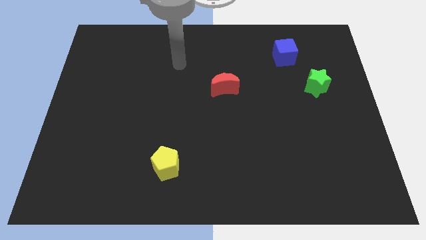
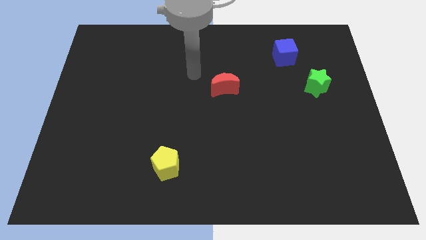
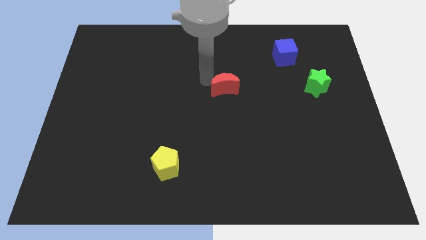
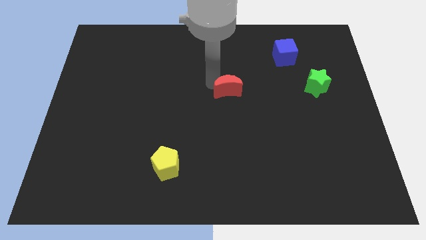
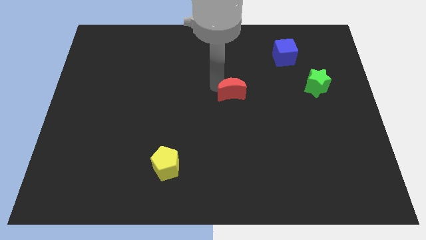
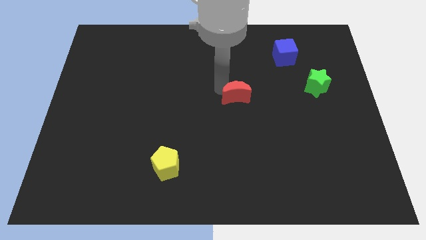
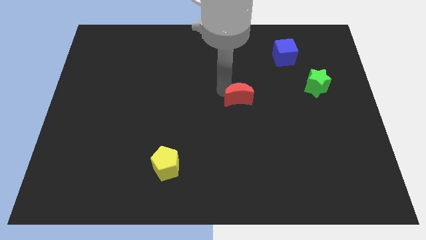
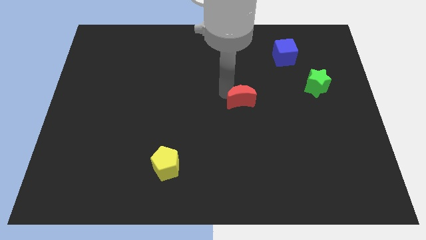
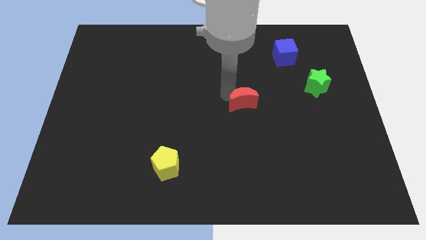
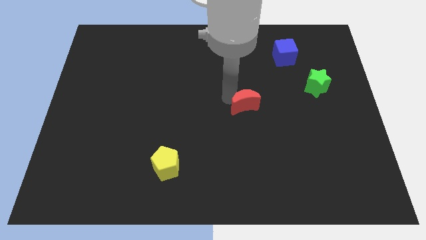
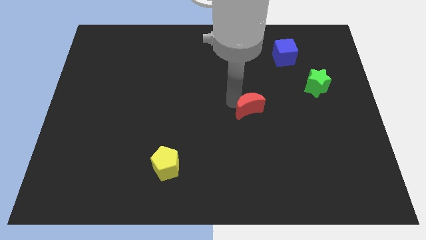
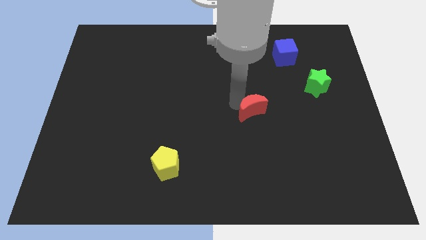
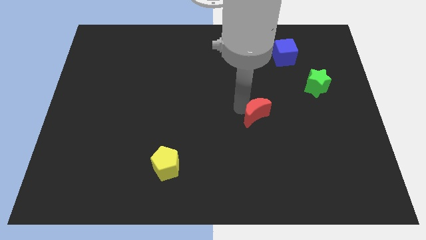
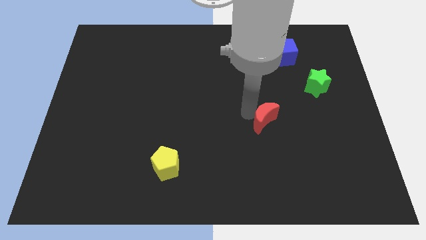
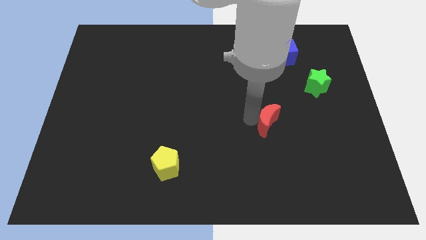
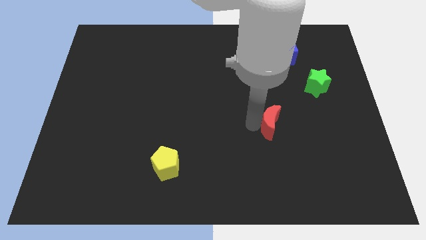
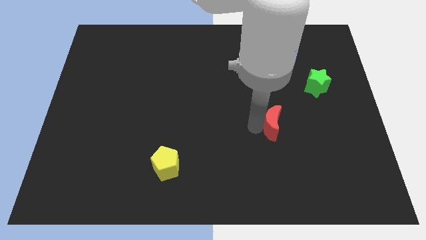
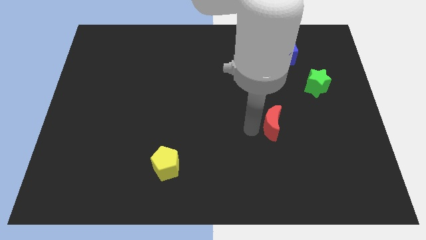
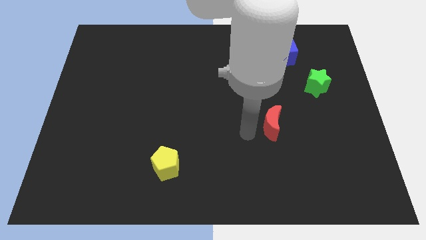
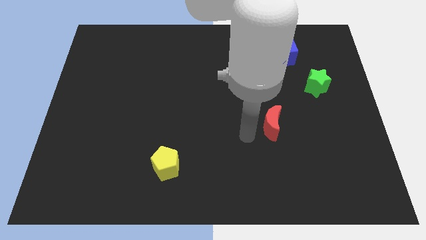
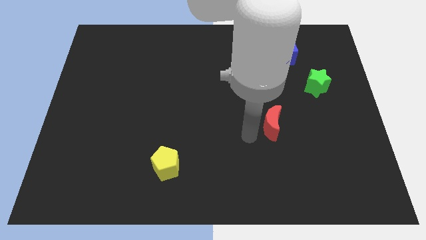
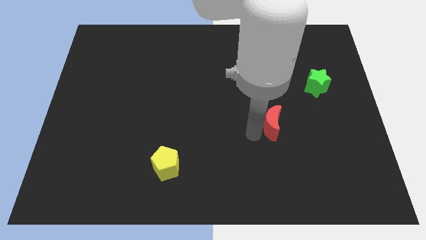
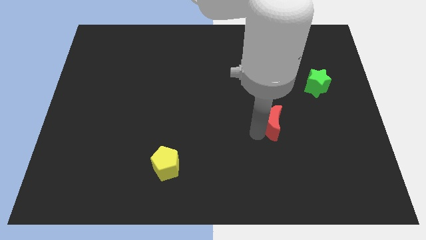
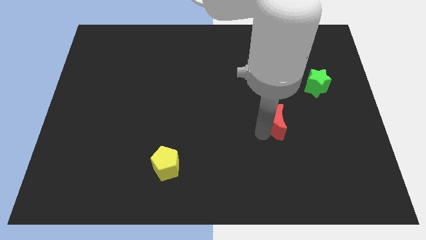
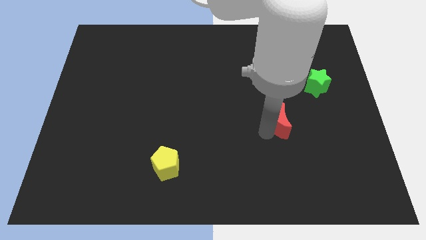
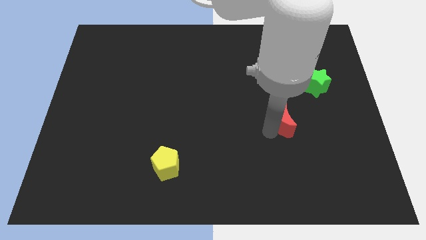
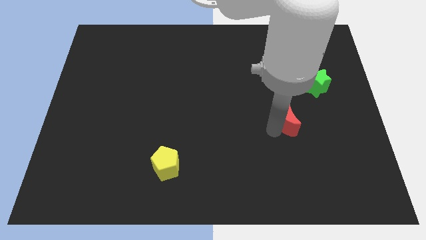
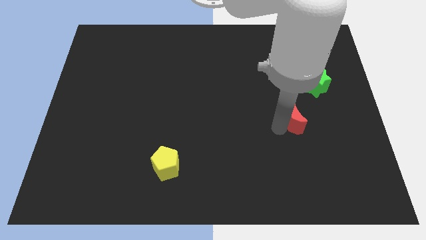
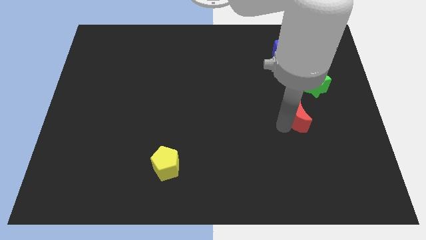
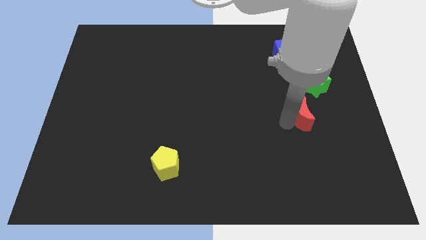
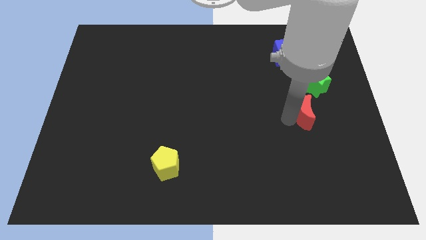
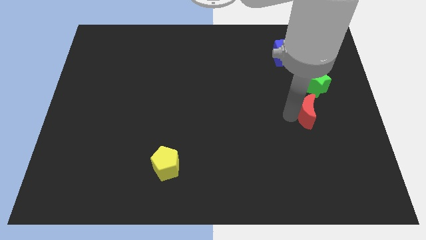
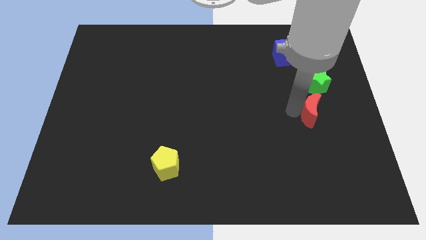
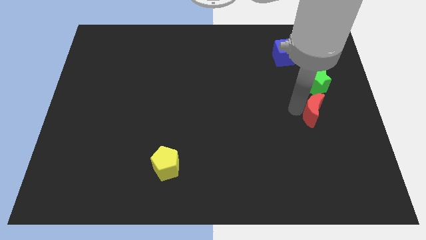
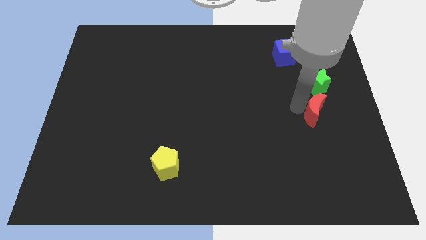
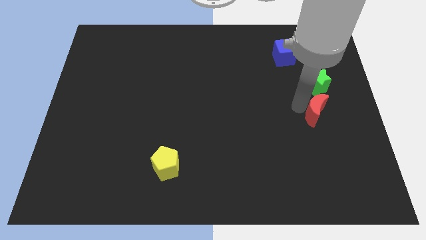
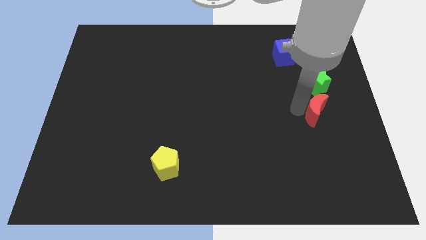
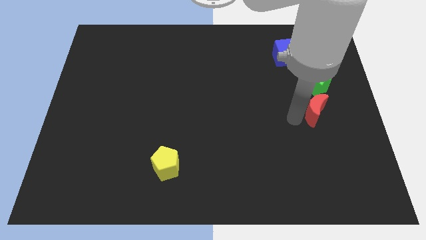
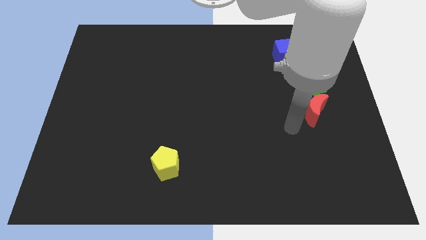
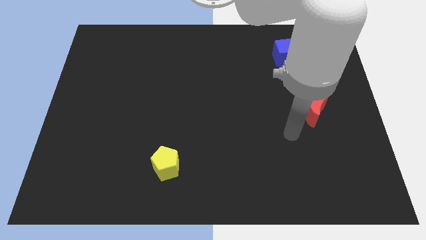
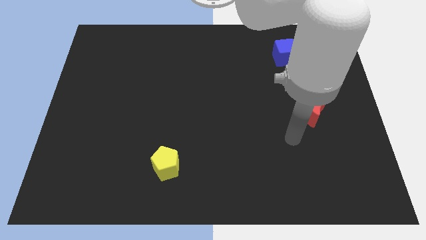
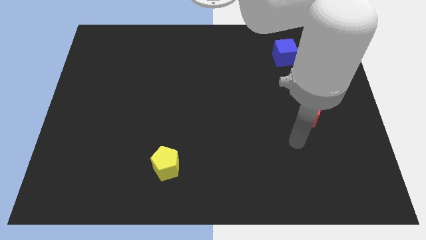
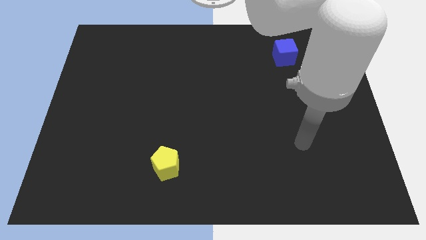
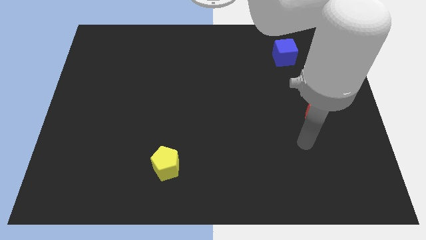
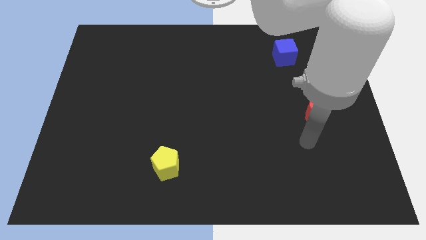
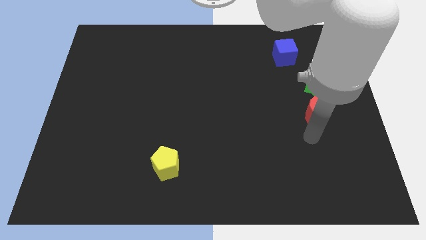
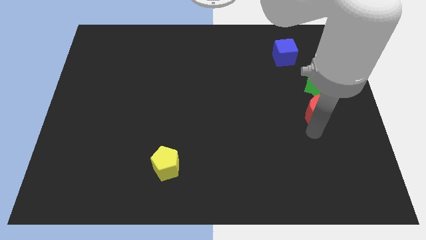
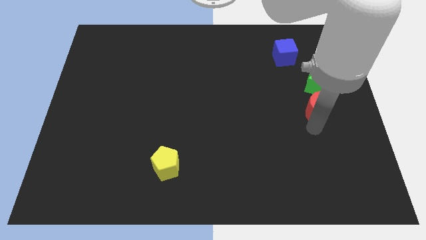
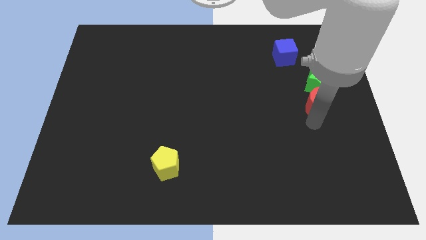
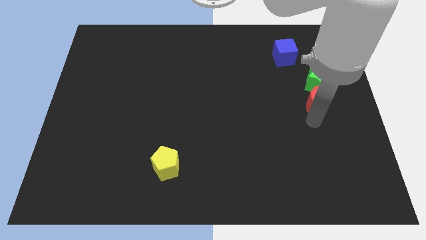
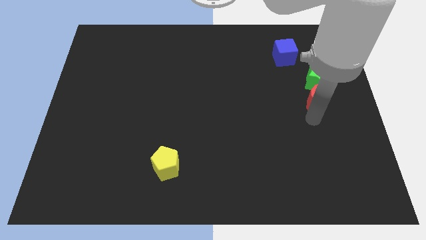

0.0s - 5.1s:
slide the red block towards the green block

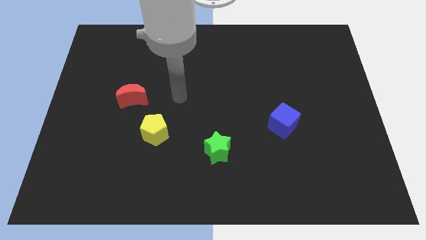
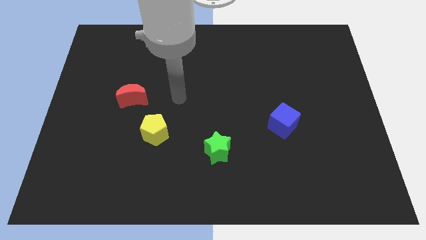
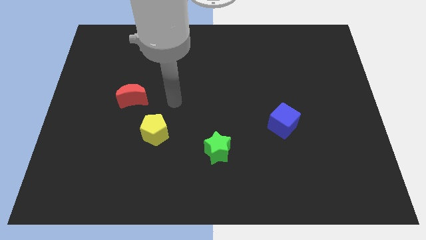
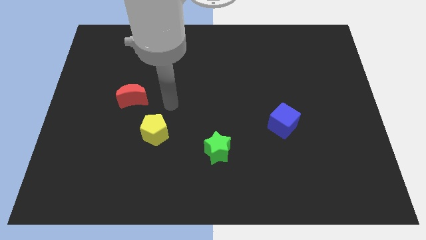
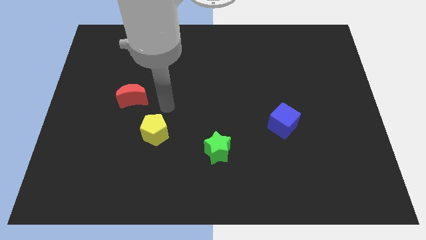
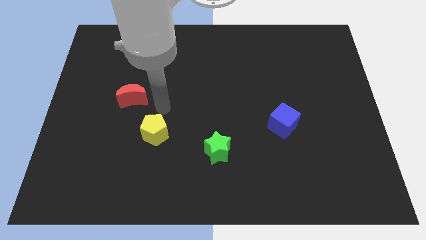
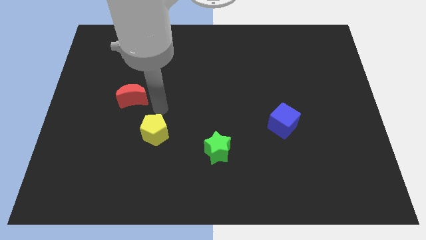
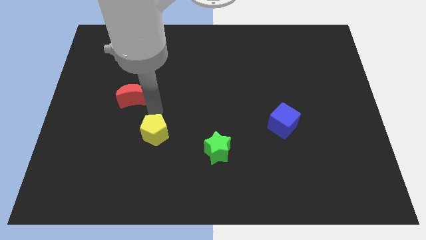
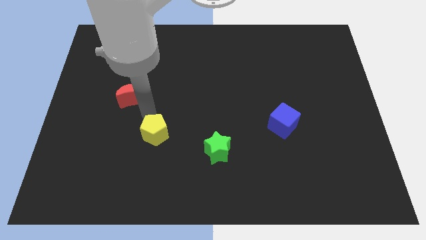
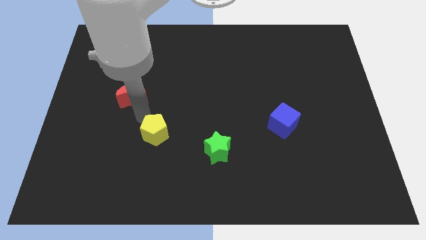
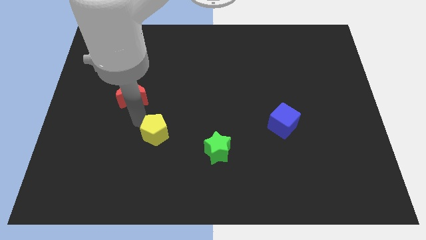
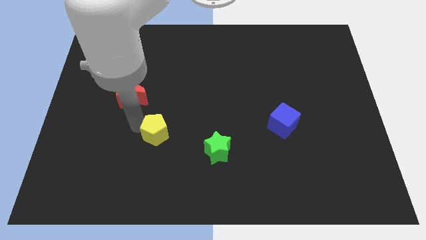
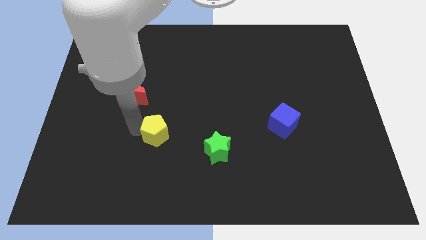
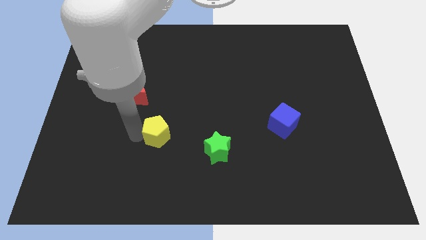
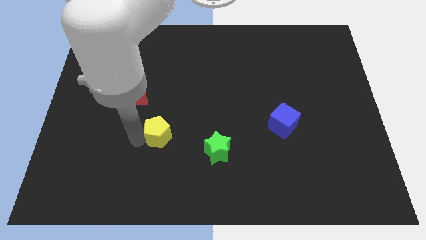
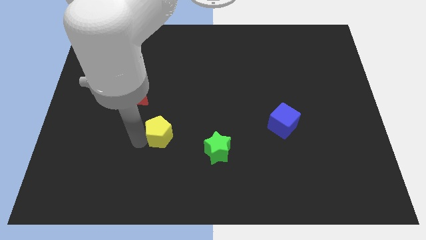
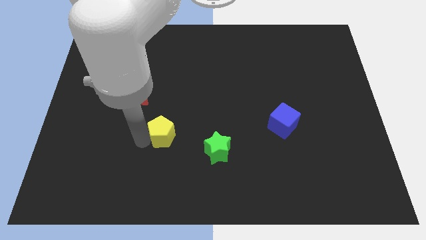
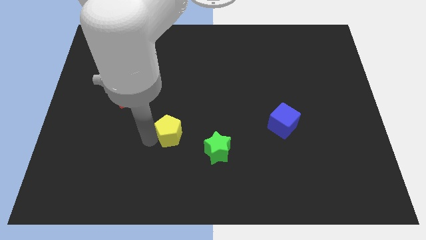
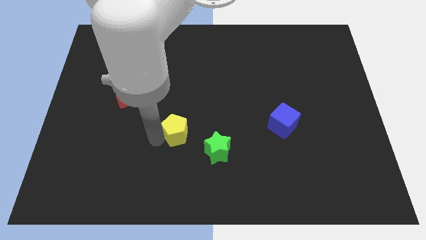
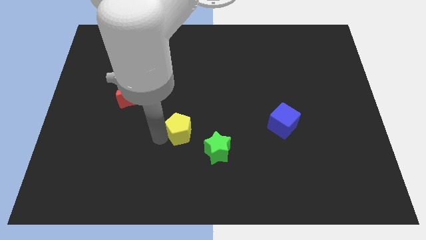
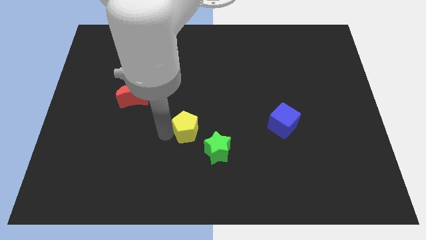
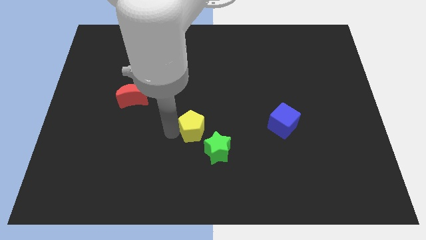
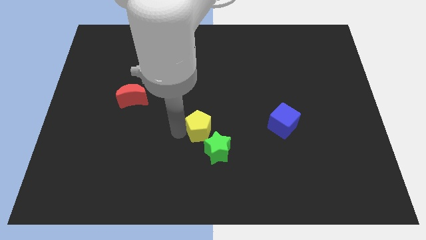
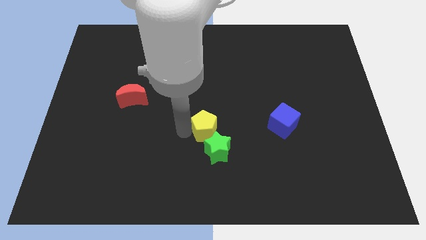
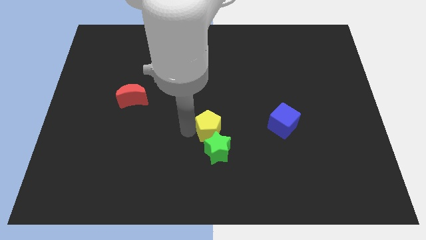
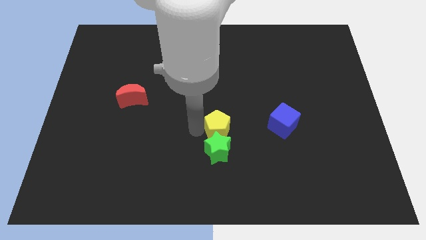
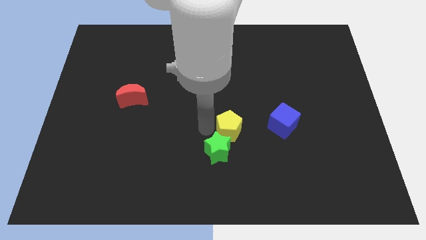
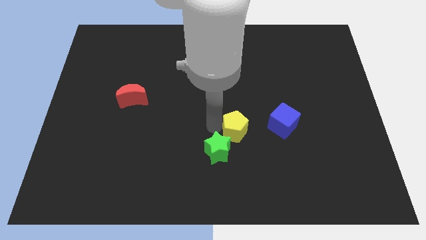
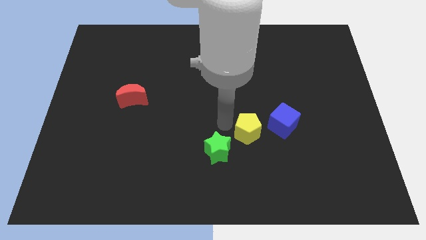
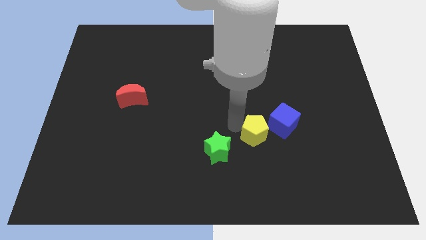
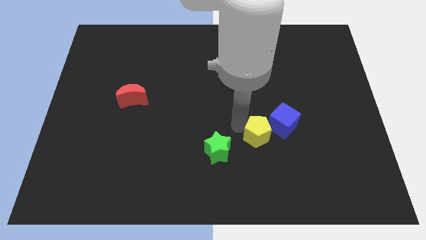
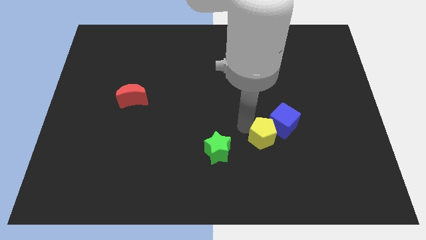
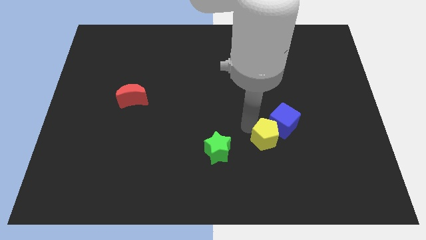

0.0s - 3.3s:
push the pentagon close to the blue block
